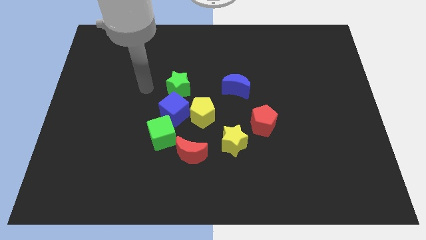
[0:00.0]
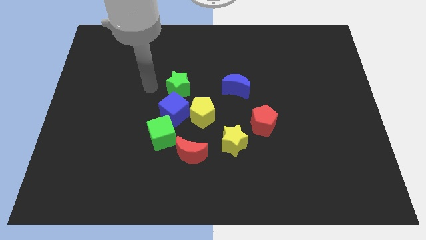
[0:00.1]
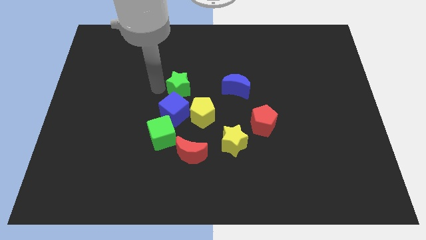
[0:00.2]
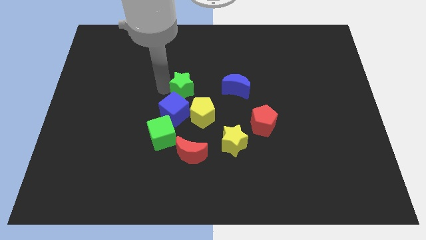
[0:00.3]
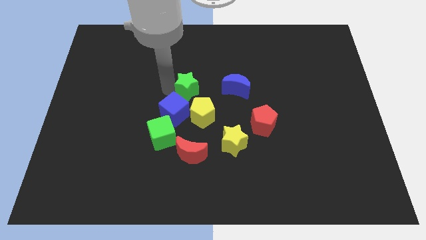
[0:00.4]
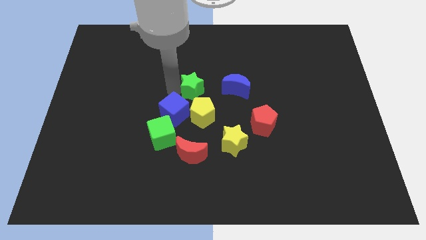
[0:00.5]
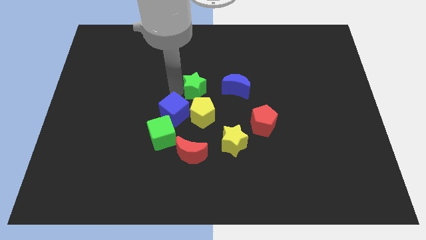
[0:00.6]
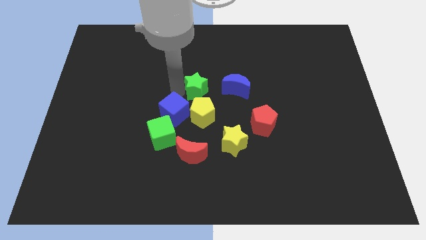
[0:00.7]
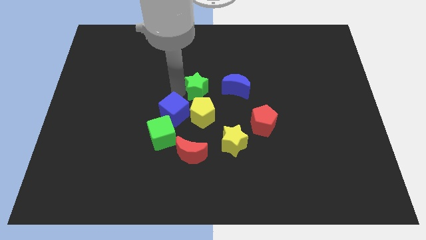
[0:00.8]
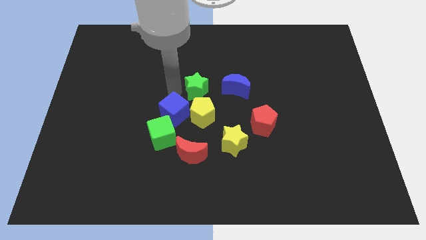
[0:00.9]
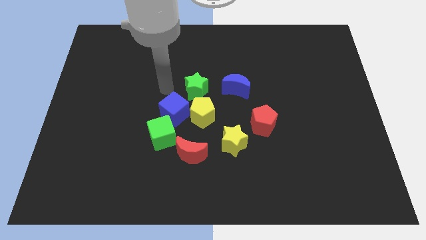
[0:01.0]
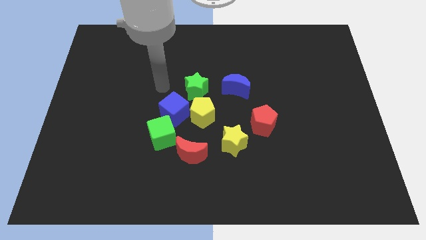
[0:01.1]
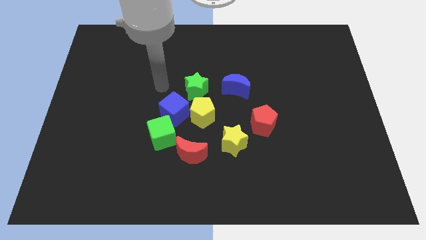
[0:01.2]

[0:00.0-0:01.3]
push the green star to the left side of the blue moon

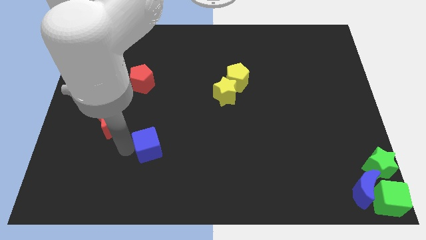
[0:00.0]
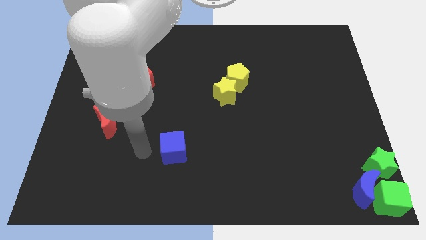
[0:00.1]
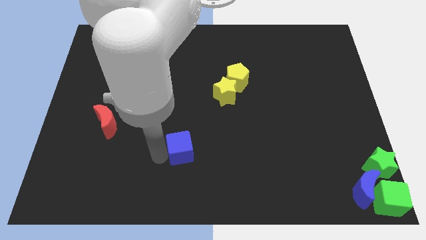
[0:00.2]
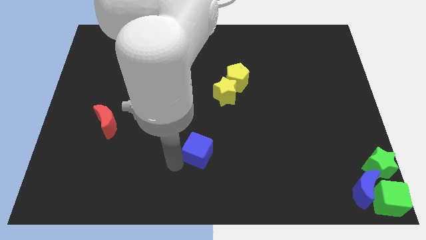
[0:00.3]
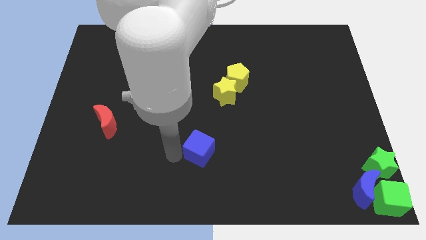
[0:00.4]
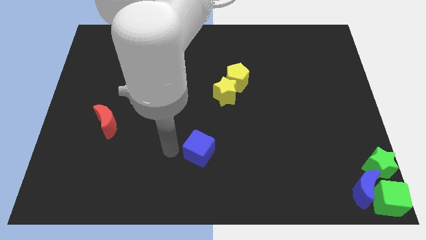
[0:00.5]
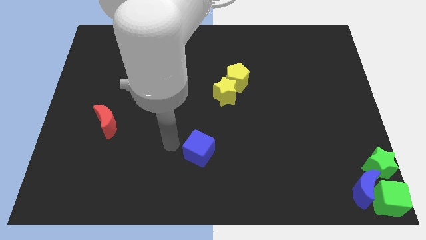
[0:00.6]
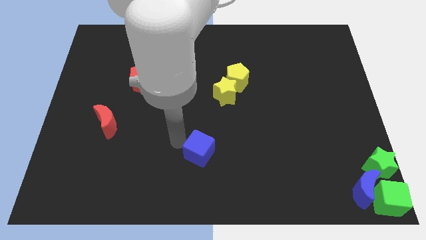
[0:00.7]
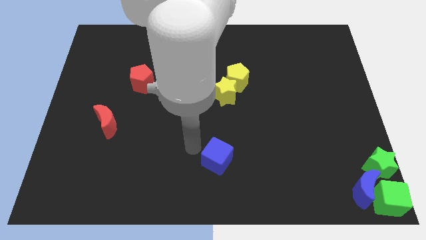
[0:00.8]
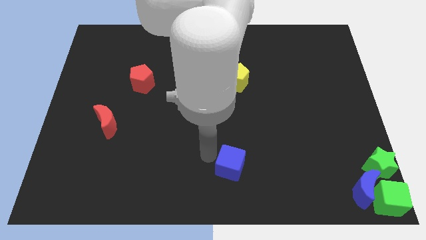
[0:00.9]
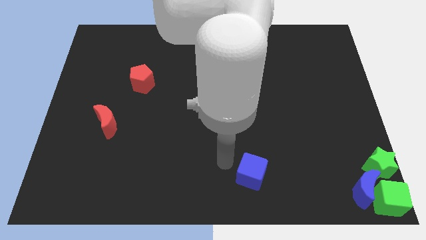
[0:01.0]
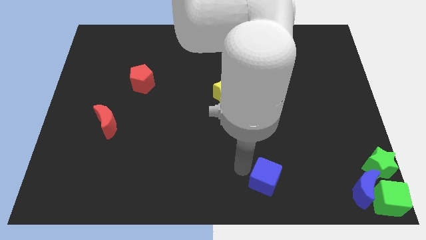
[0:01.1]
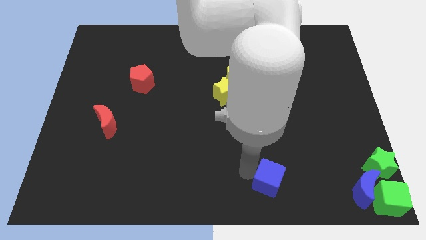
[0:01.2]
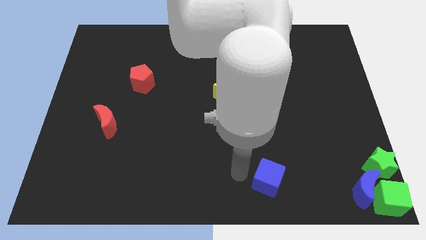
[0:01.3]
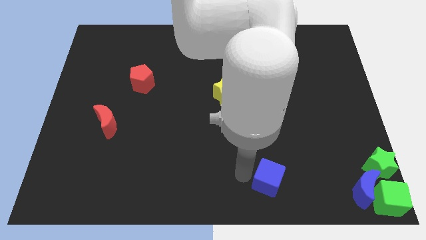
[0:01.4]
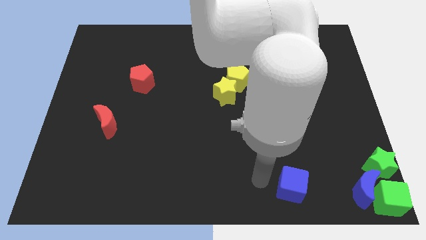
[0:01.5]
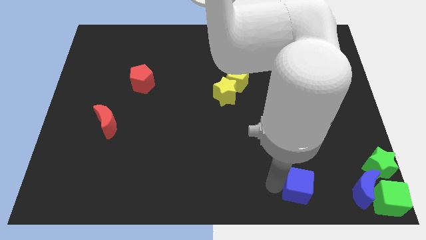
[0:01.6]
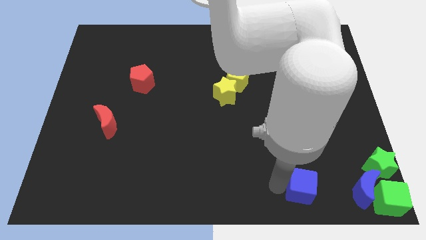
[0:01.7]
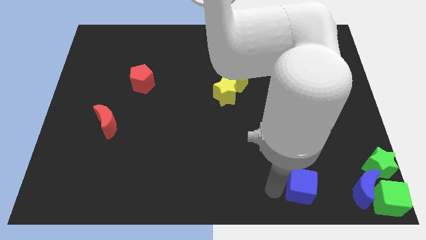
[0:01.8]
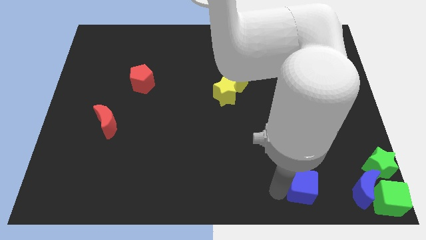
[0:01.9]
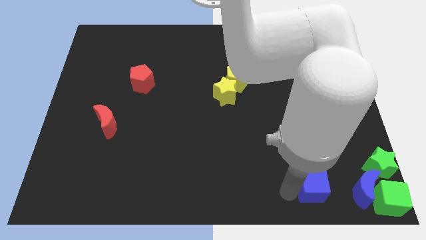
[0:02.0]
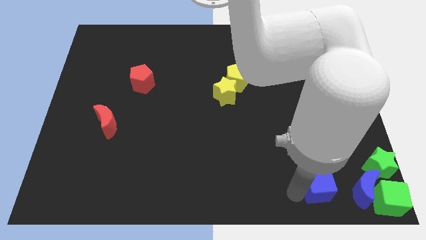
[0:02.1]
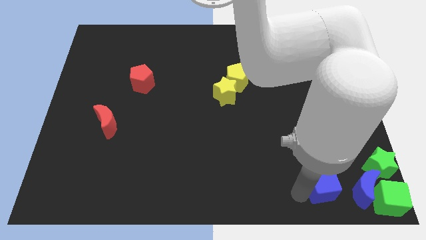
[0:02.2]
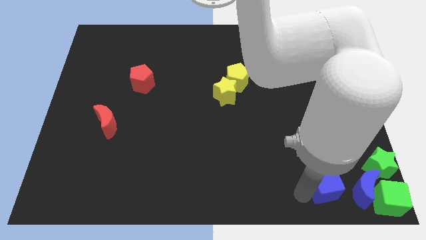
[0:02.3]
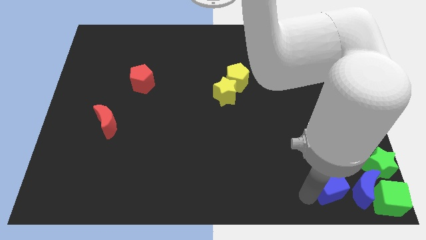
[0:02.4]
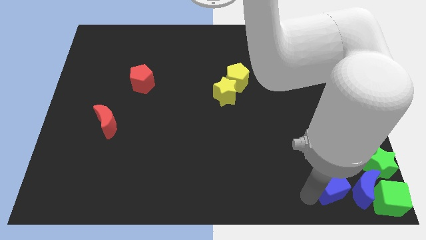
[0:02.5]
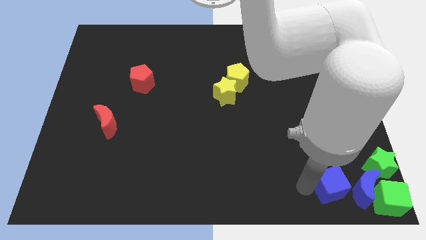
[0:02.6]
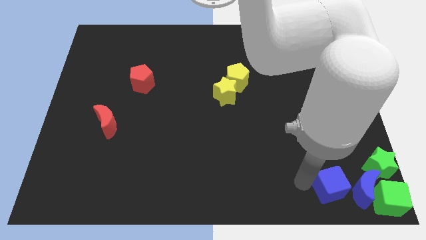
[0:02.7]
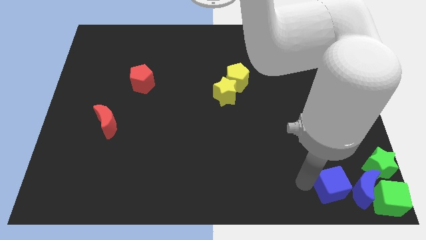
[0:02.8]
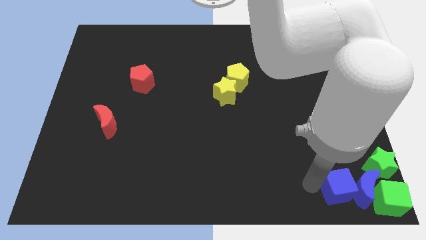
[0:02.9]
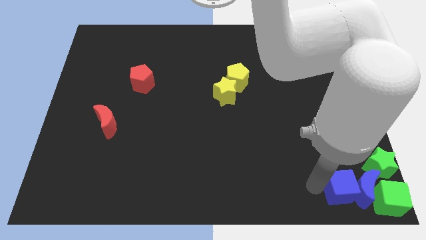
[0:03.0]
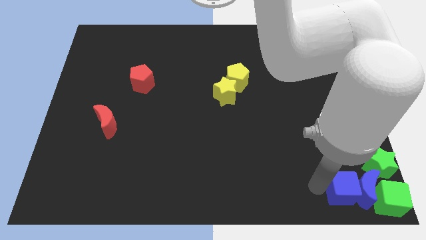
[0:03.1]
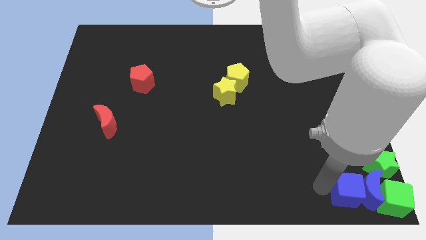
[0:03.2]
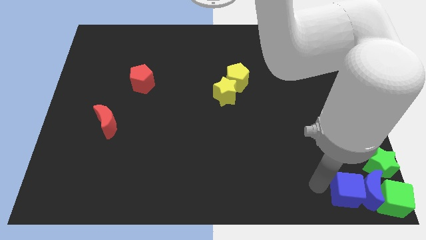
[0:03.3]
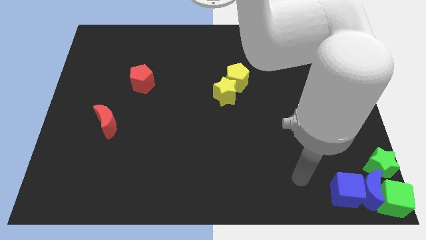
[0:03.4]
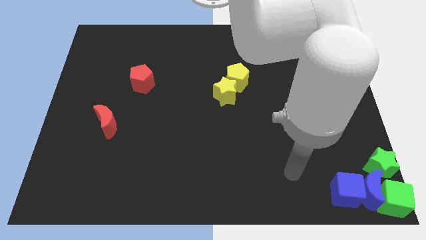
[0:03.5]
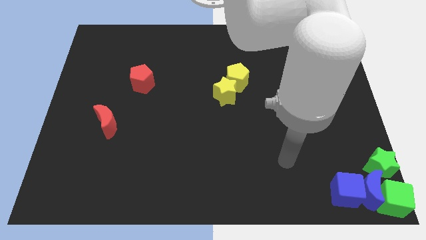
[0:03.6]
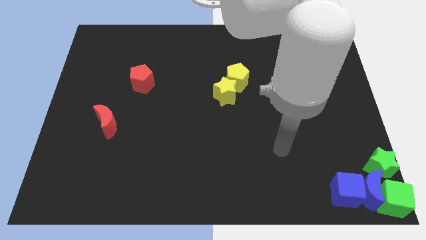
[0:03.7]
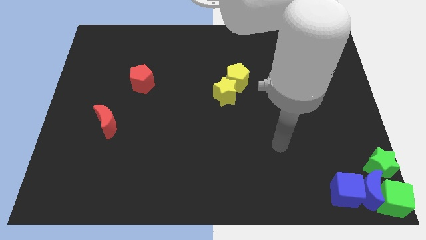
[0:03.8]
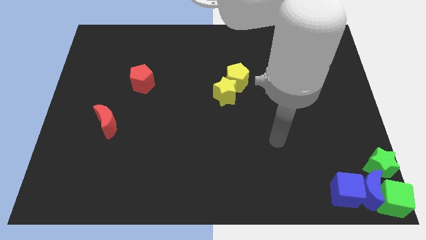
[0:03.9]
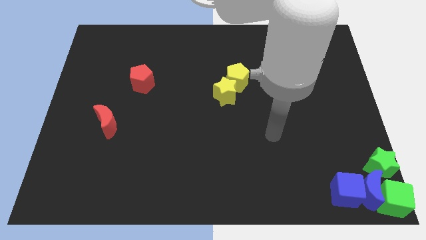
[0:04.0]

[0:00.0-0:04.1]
push the blue cube to the left of the blue crescent

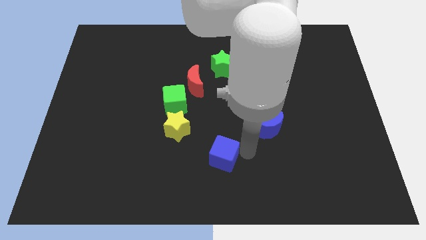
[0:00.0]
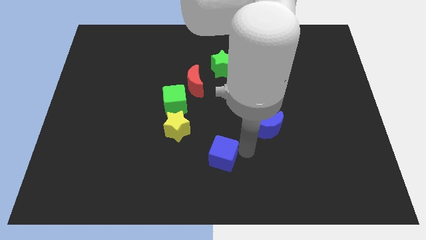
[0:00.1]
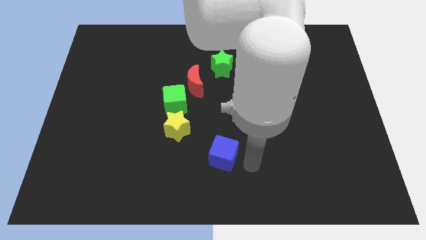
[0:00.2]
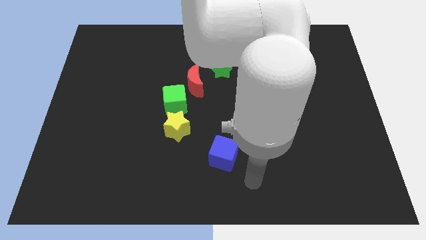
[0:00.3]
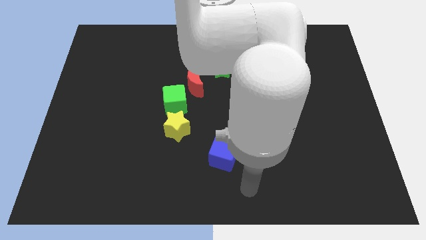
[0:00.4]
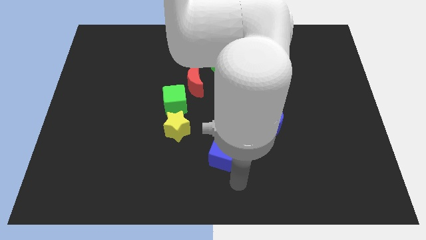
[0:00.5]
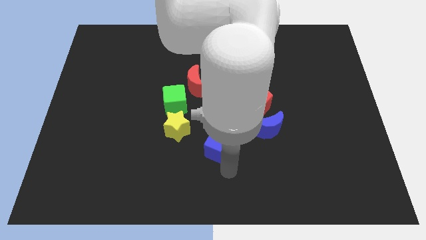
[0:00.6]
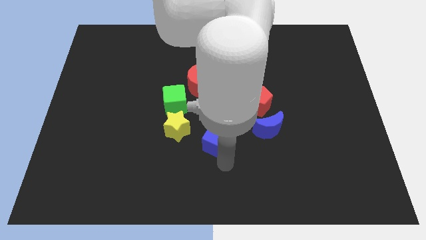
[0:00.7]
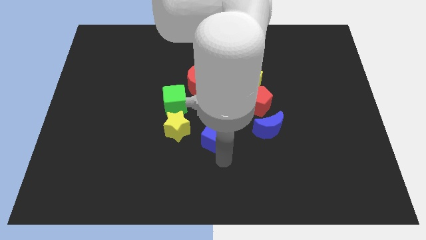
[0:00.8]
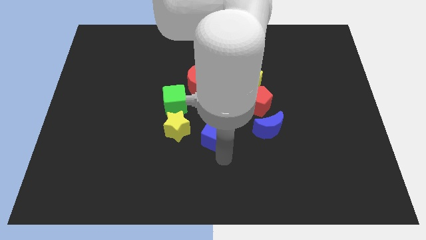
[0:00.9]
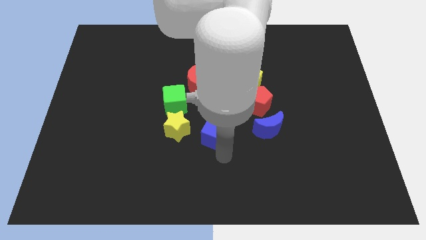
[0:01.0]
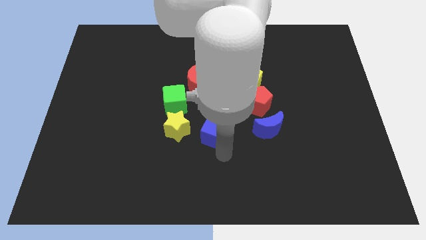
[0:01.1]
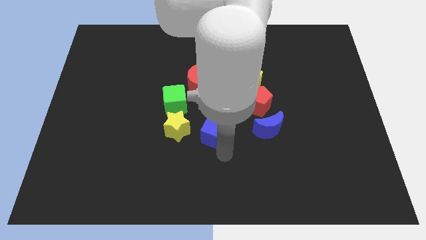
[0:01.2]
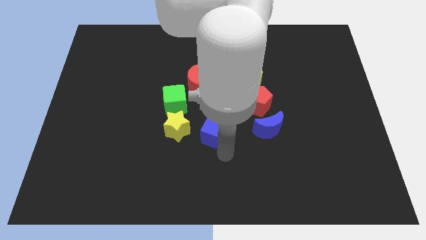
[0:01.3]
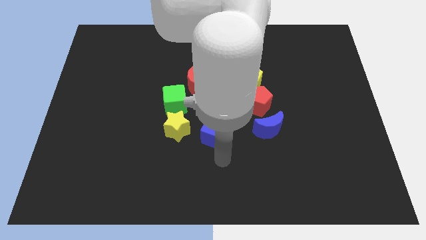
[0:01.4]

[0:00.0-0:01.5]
move the blue cube to the right of the yellow star

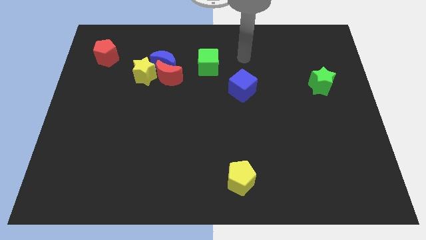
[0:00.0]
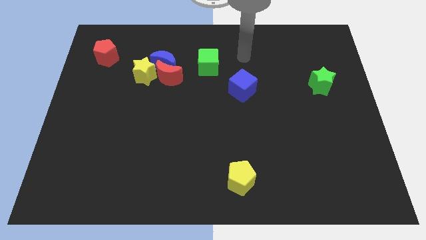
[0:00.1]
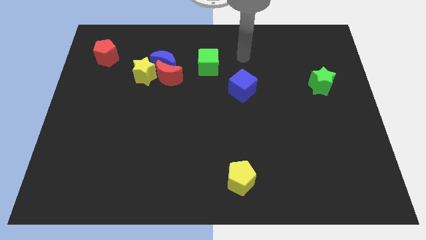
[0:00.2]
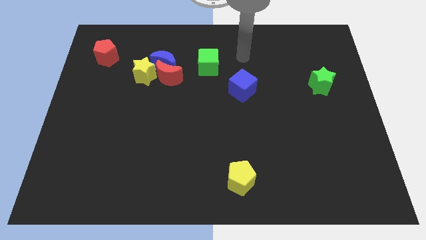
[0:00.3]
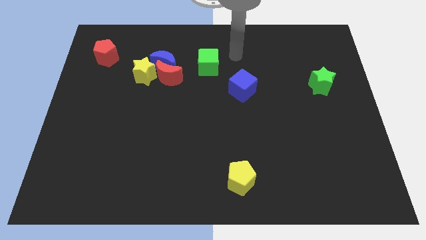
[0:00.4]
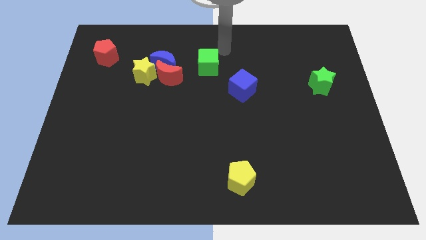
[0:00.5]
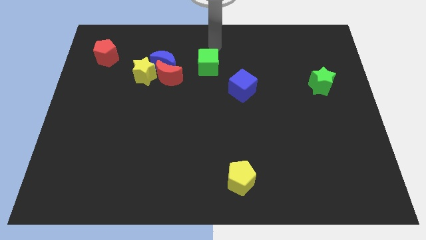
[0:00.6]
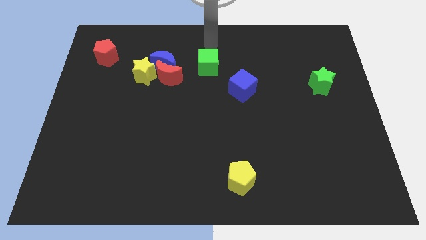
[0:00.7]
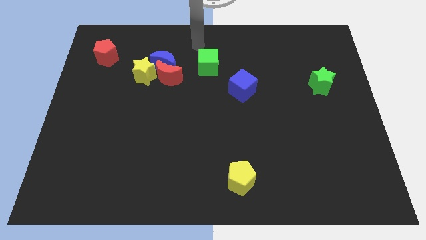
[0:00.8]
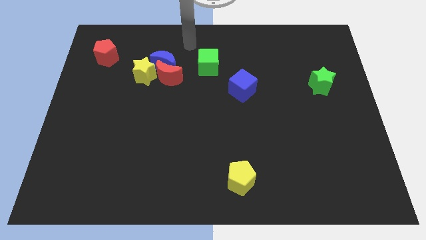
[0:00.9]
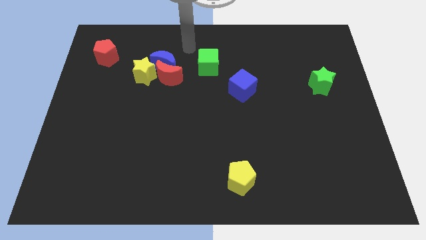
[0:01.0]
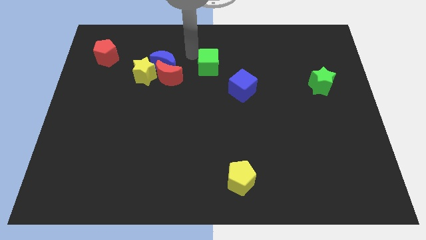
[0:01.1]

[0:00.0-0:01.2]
move the arm towards the top left of green cube

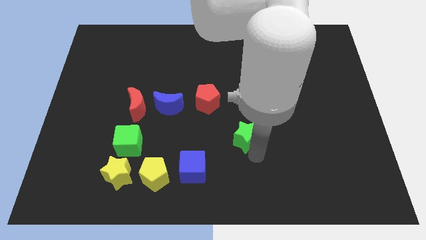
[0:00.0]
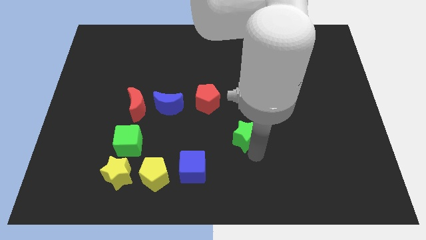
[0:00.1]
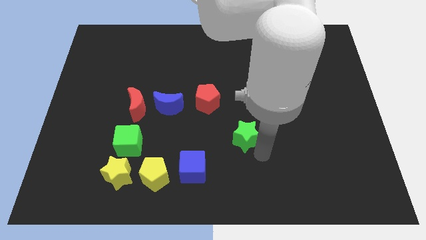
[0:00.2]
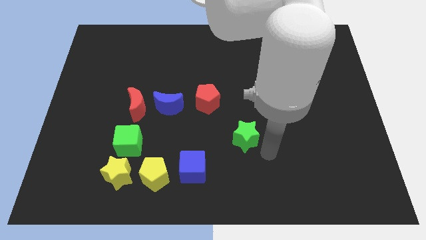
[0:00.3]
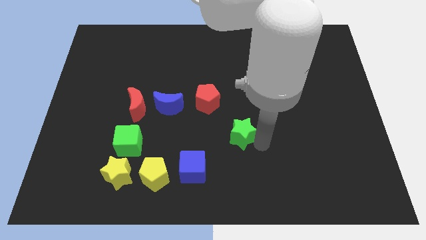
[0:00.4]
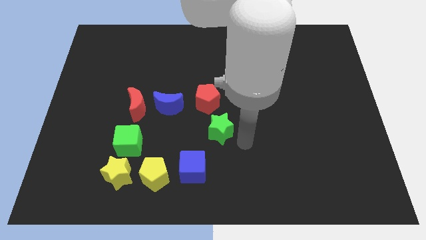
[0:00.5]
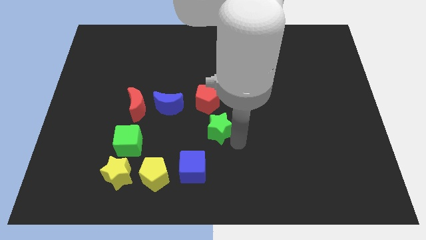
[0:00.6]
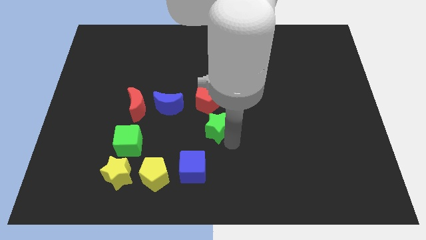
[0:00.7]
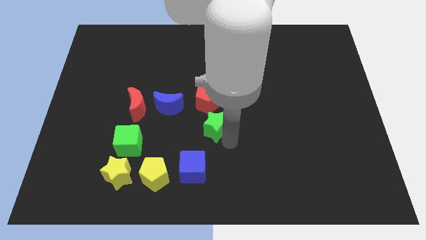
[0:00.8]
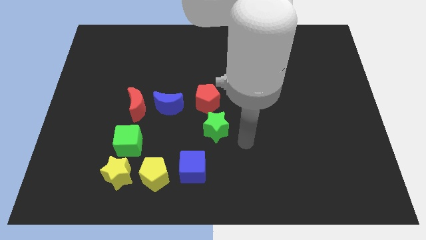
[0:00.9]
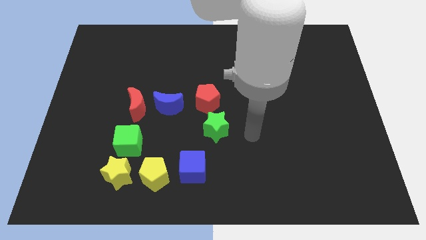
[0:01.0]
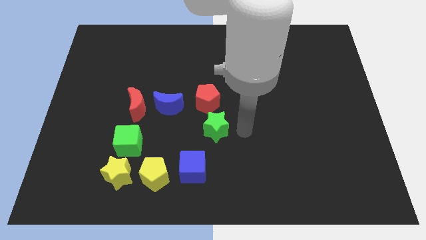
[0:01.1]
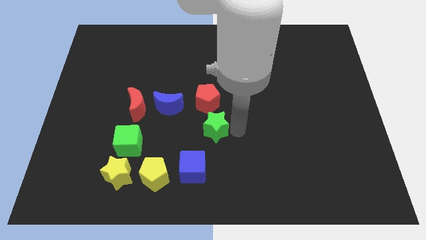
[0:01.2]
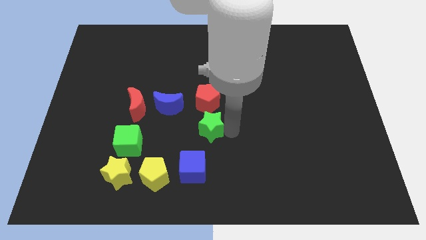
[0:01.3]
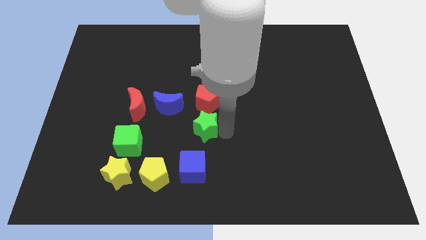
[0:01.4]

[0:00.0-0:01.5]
place the green star to the bottom of the red pentagon
